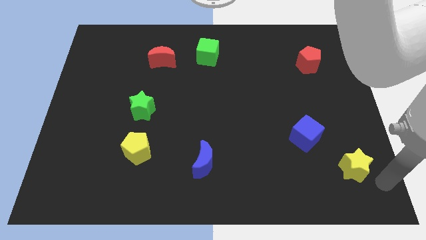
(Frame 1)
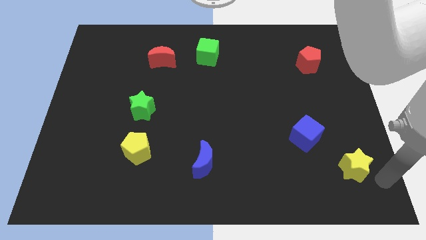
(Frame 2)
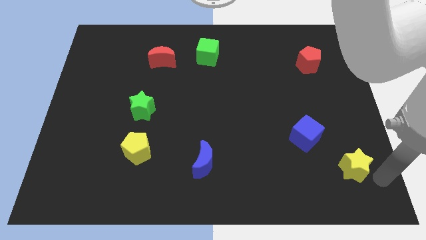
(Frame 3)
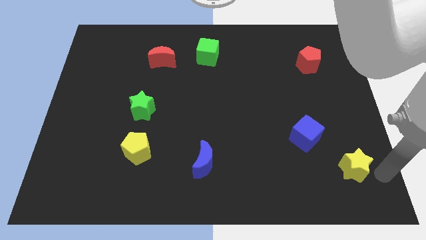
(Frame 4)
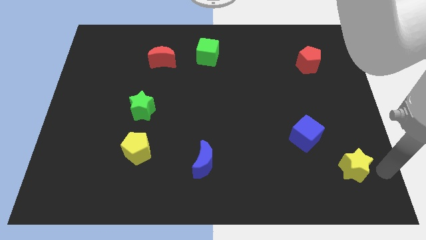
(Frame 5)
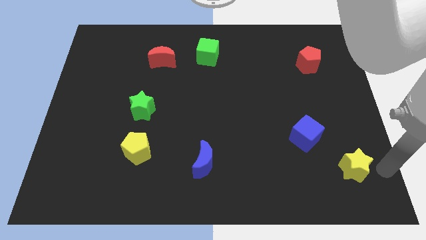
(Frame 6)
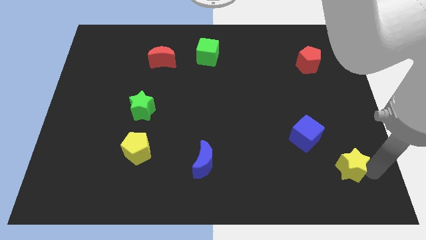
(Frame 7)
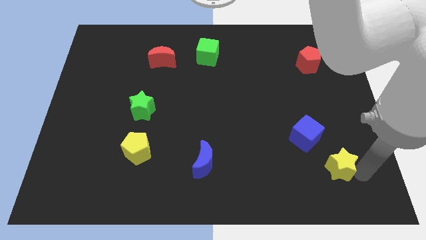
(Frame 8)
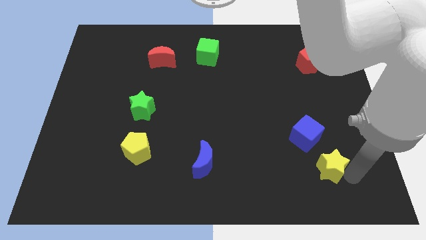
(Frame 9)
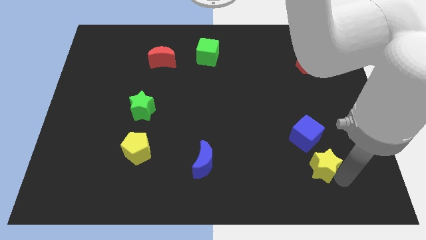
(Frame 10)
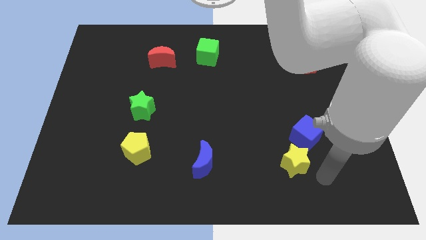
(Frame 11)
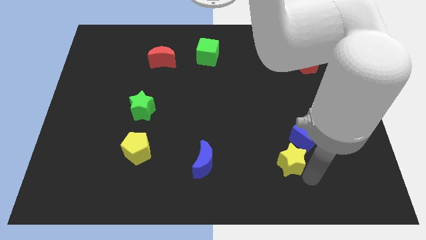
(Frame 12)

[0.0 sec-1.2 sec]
push the yellow star slightly to the left

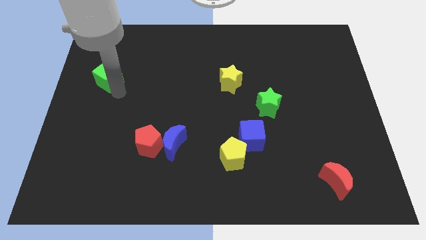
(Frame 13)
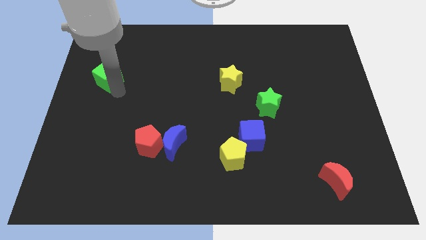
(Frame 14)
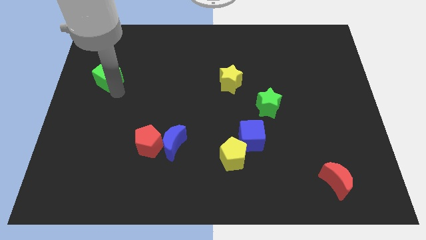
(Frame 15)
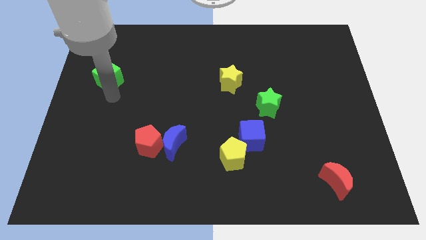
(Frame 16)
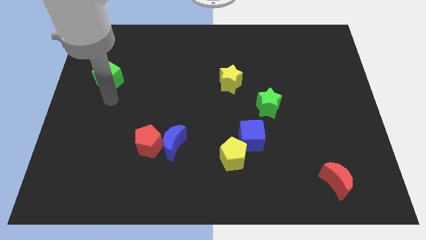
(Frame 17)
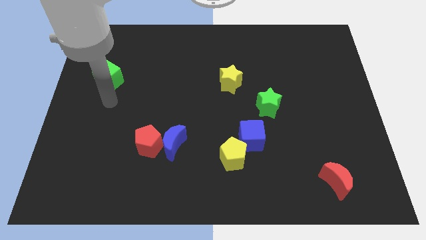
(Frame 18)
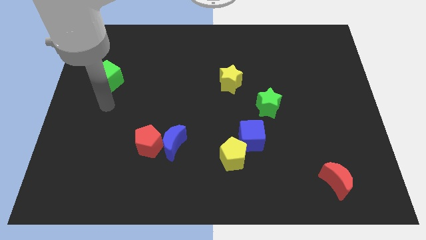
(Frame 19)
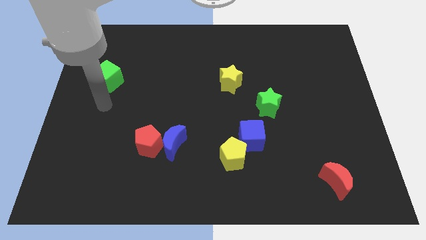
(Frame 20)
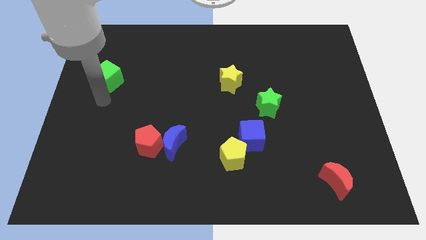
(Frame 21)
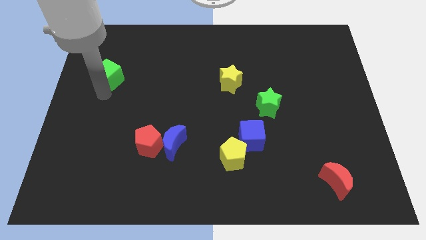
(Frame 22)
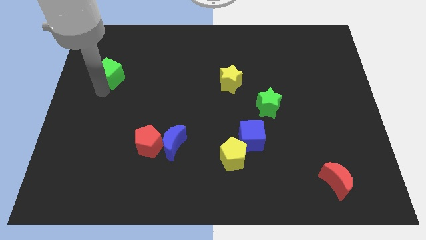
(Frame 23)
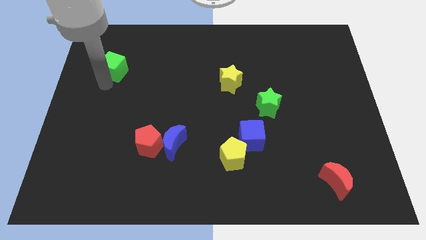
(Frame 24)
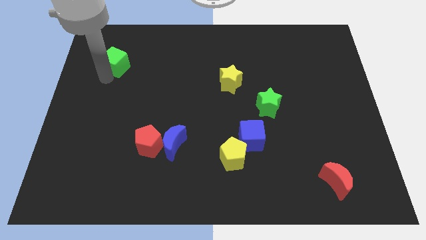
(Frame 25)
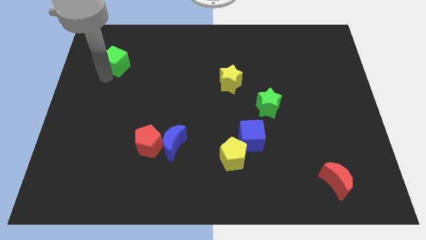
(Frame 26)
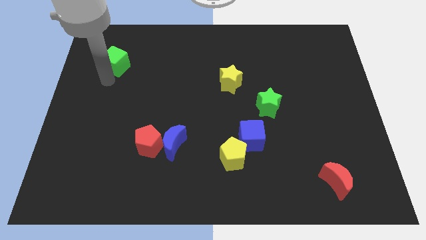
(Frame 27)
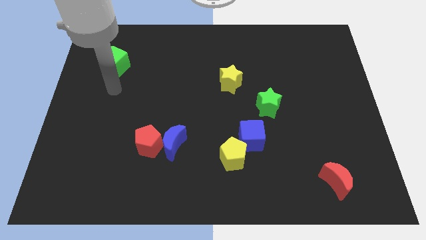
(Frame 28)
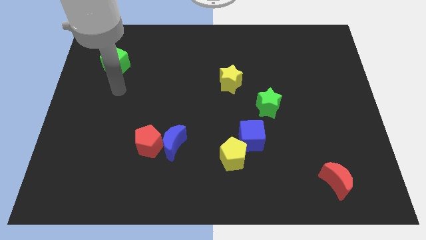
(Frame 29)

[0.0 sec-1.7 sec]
slide the green cube towards the top side

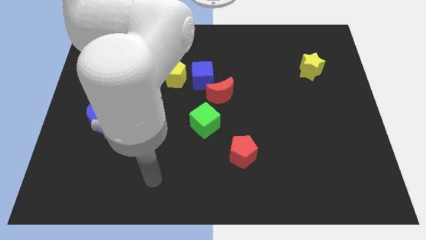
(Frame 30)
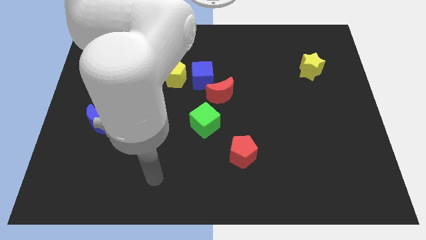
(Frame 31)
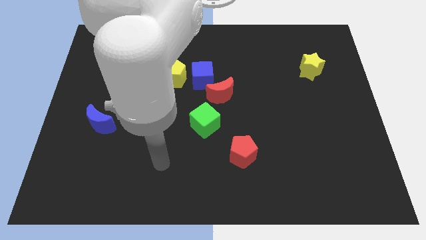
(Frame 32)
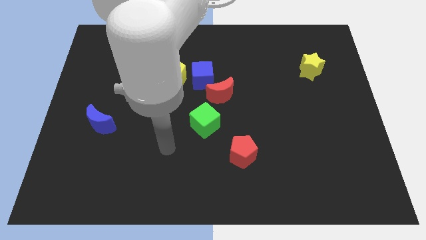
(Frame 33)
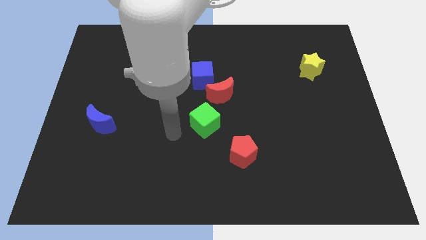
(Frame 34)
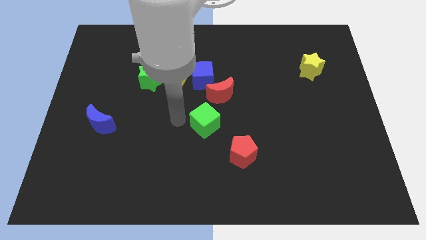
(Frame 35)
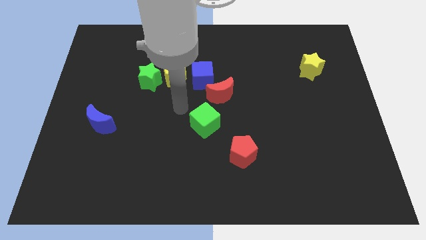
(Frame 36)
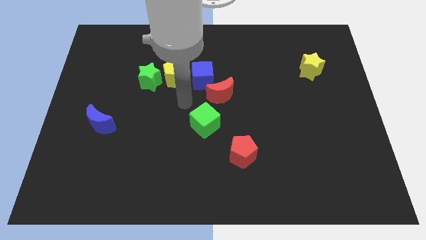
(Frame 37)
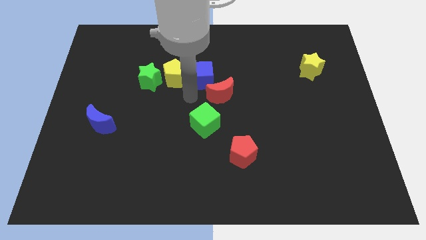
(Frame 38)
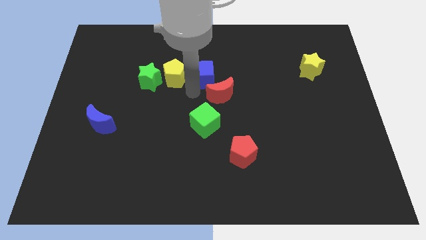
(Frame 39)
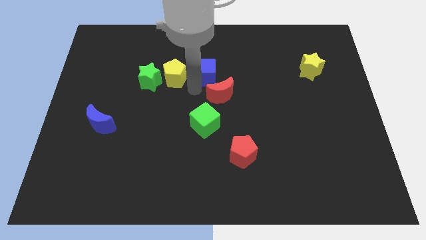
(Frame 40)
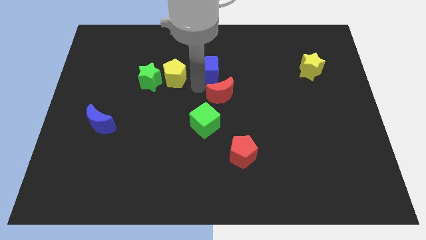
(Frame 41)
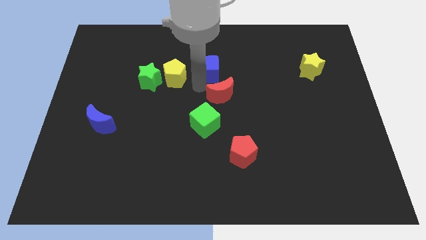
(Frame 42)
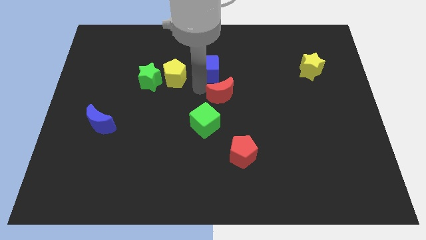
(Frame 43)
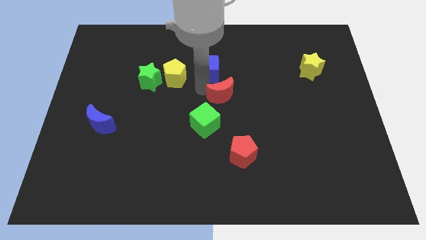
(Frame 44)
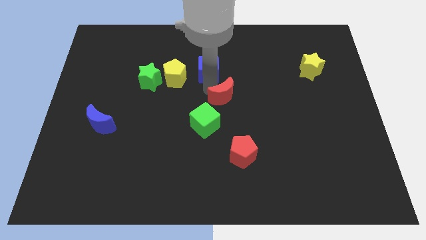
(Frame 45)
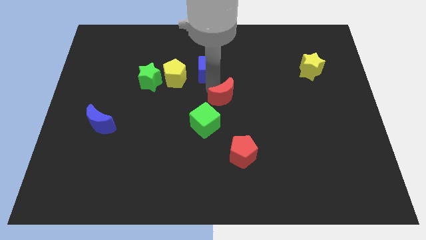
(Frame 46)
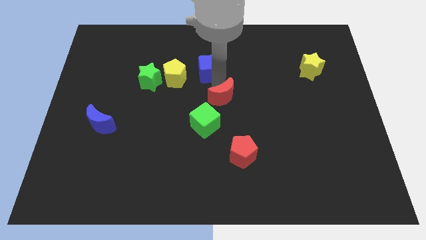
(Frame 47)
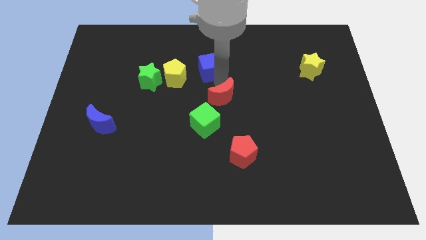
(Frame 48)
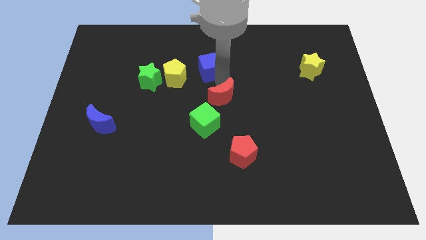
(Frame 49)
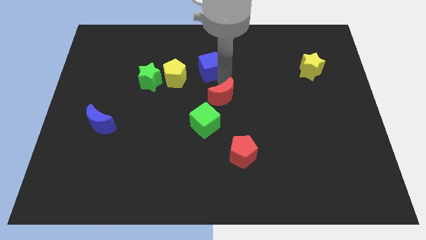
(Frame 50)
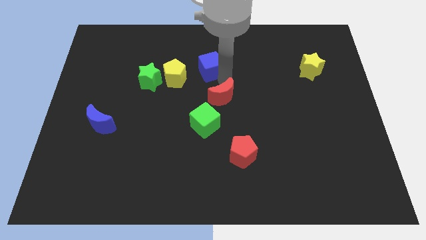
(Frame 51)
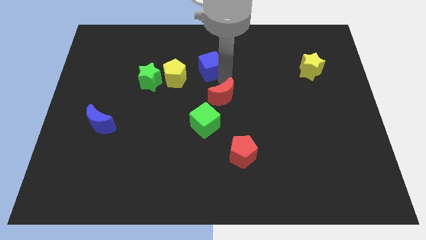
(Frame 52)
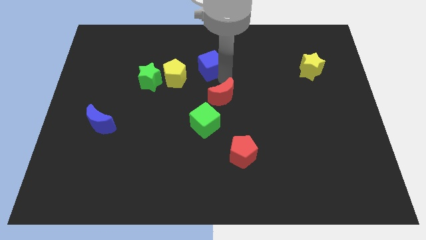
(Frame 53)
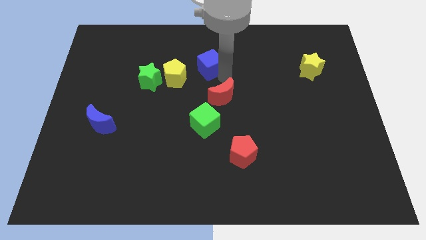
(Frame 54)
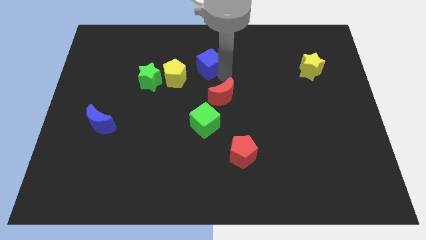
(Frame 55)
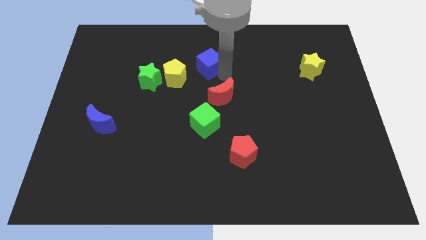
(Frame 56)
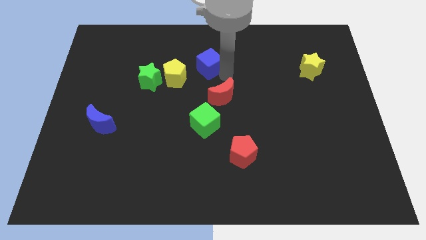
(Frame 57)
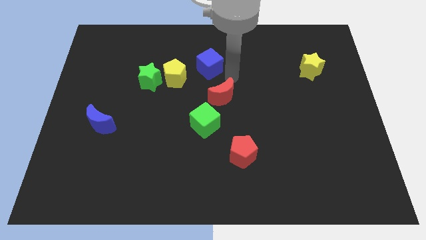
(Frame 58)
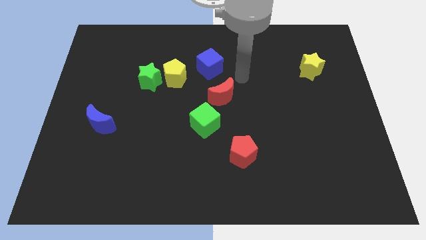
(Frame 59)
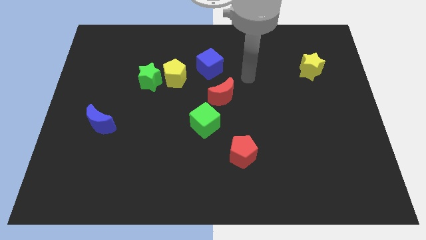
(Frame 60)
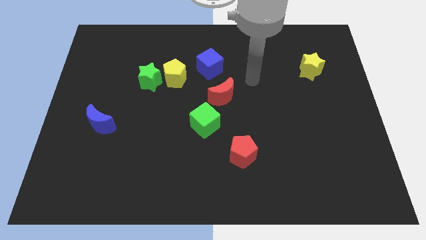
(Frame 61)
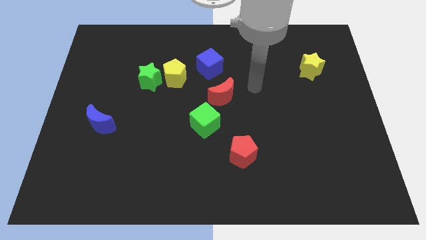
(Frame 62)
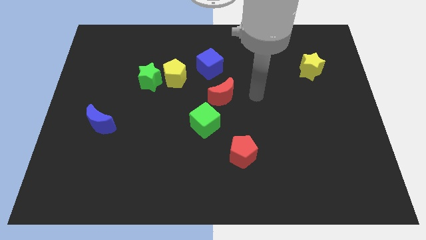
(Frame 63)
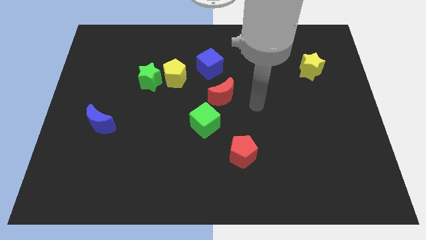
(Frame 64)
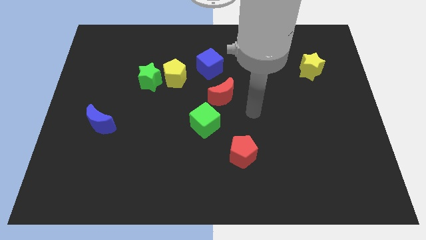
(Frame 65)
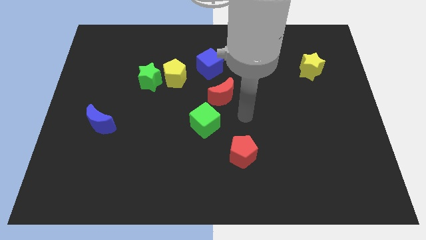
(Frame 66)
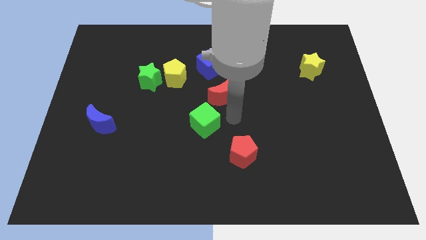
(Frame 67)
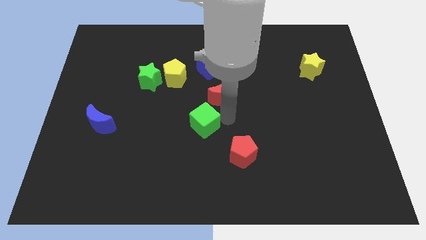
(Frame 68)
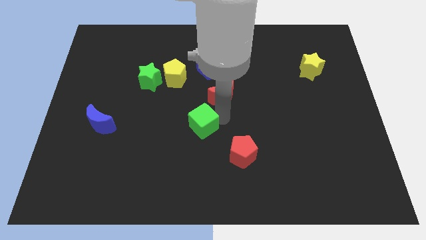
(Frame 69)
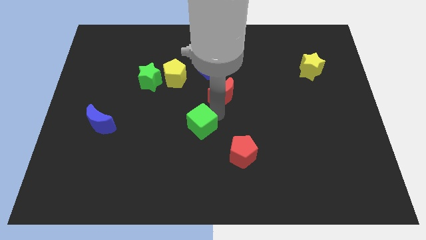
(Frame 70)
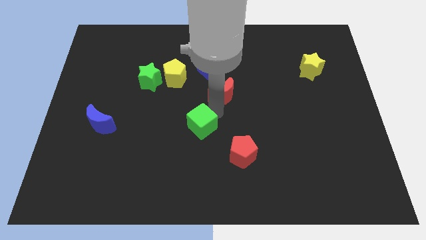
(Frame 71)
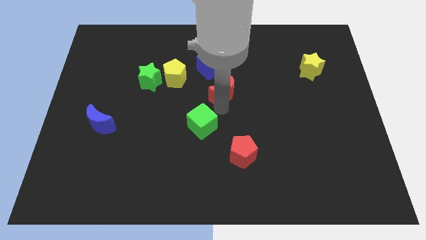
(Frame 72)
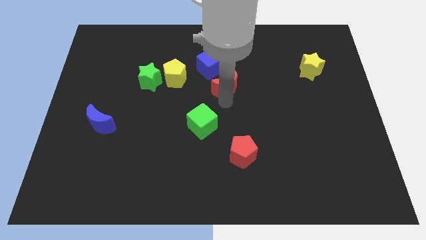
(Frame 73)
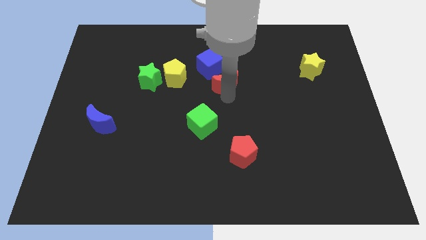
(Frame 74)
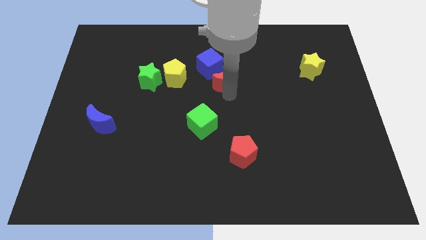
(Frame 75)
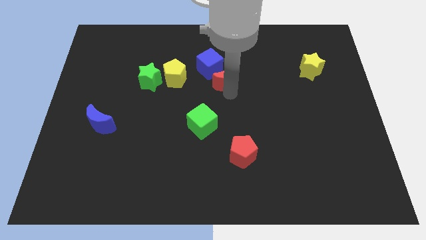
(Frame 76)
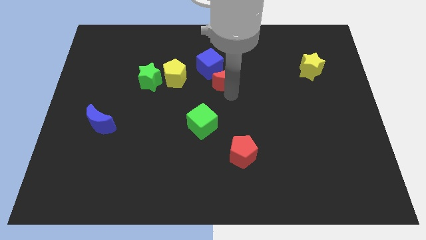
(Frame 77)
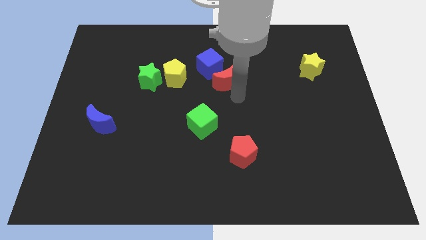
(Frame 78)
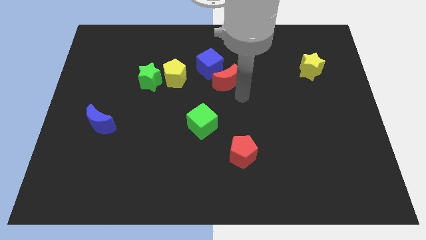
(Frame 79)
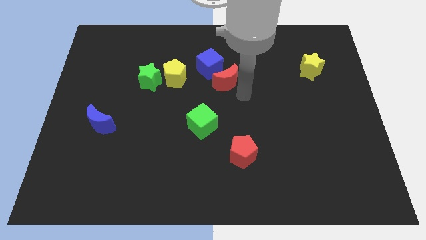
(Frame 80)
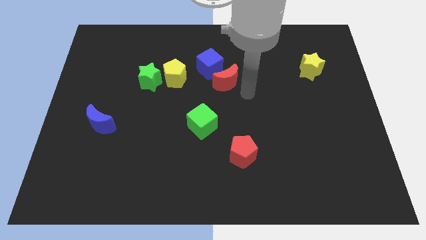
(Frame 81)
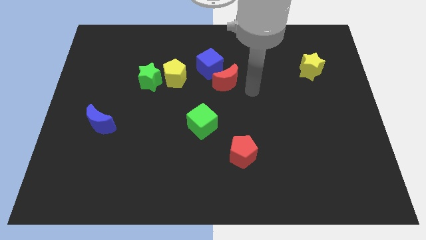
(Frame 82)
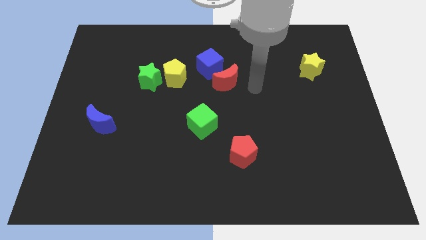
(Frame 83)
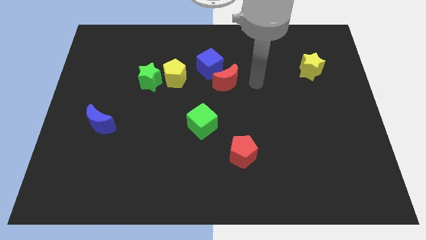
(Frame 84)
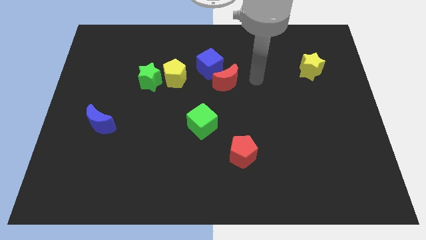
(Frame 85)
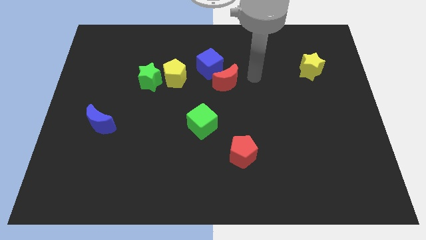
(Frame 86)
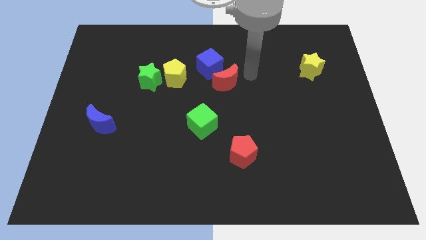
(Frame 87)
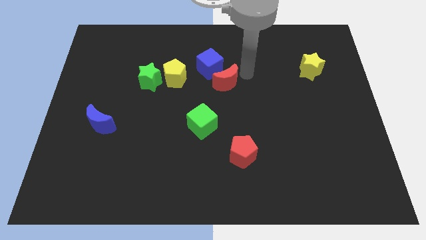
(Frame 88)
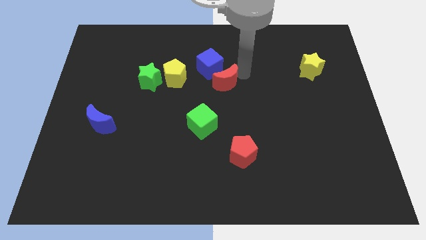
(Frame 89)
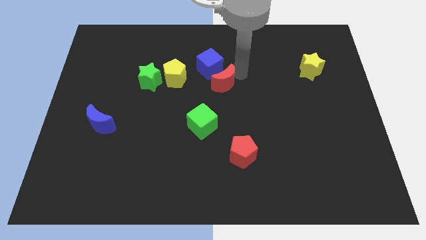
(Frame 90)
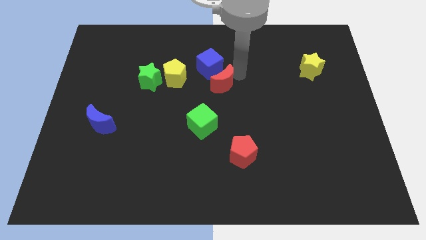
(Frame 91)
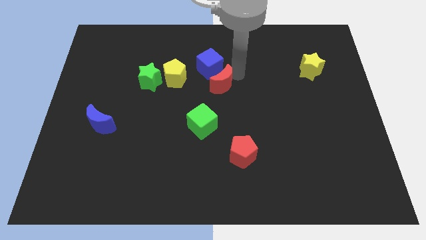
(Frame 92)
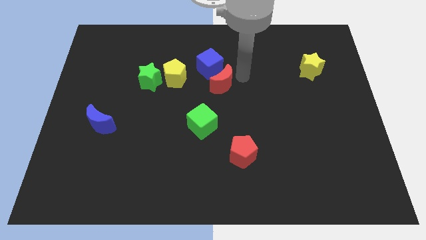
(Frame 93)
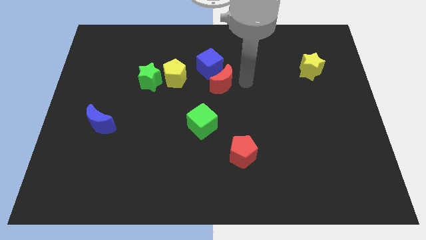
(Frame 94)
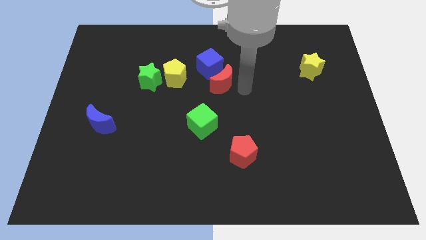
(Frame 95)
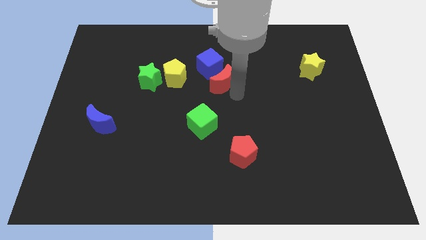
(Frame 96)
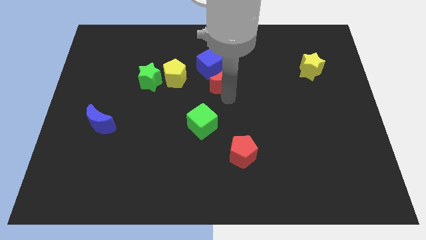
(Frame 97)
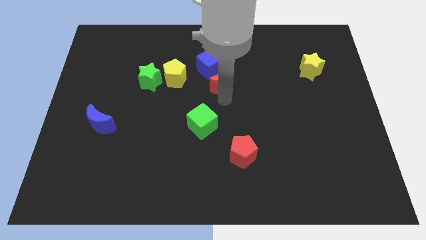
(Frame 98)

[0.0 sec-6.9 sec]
push the blue cube and red moon to the top center
